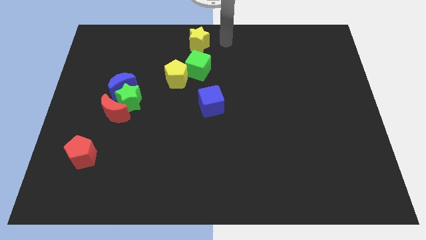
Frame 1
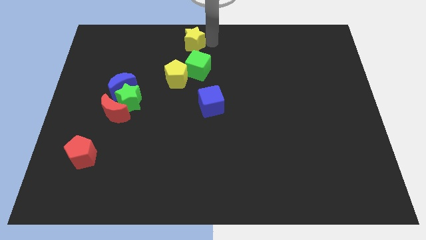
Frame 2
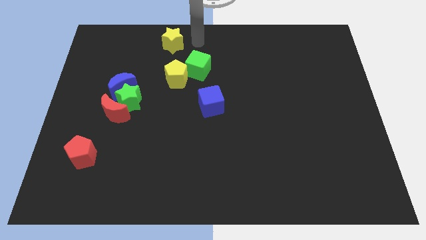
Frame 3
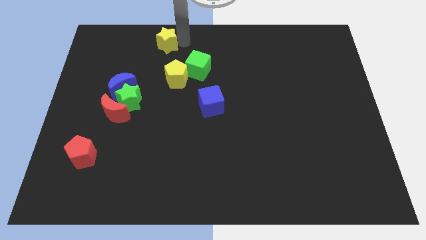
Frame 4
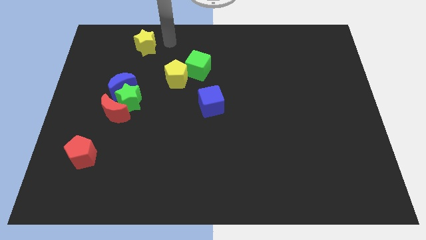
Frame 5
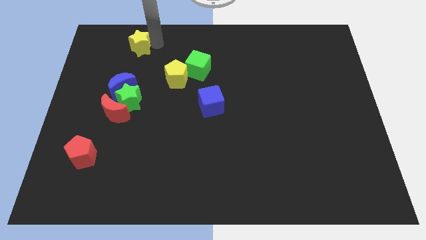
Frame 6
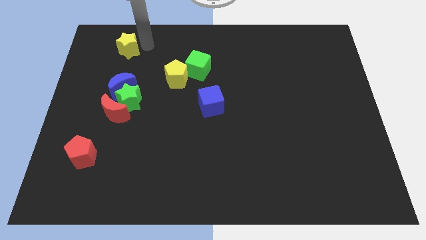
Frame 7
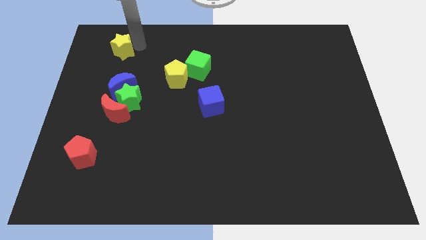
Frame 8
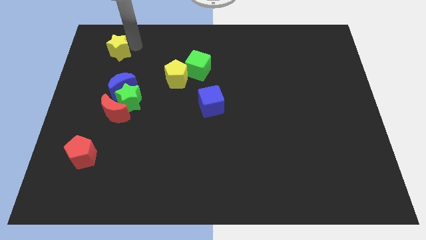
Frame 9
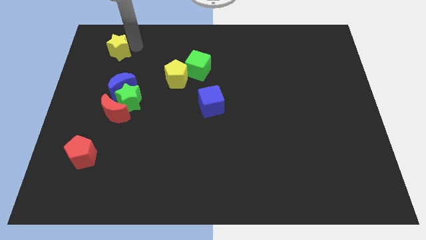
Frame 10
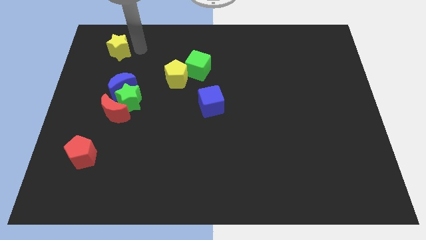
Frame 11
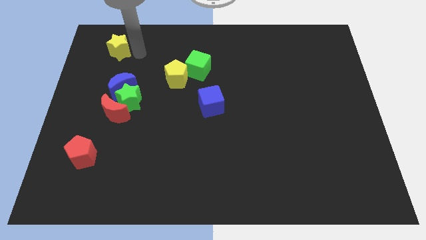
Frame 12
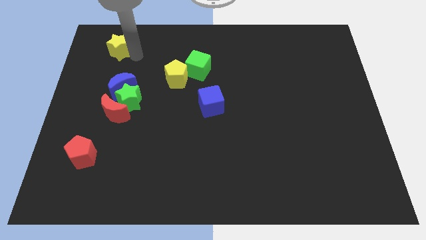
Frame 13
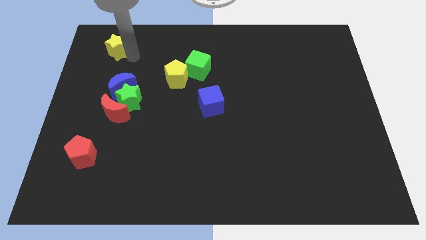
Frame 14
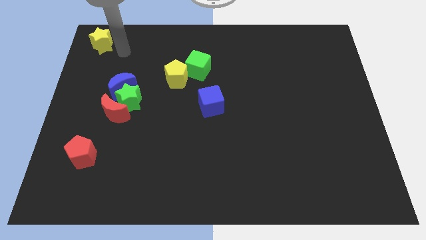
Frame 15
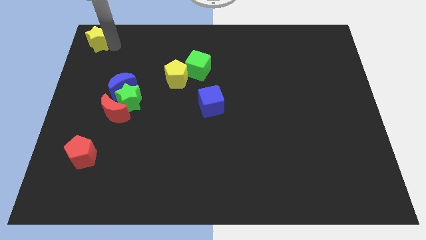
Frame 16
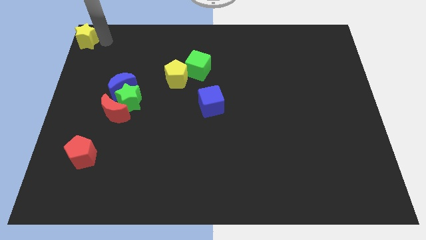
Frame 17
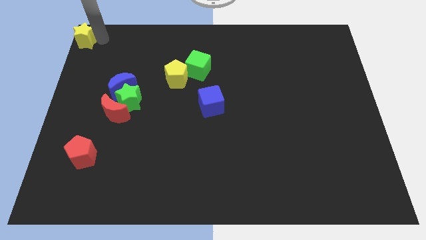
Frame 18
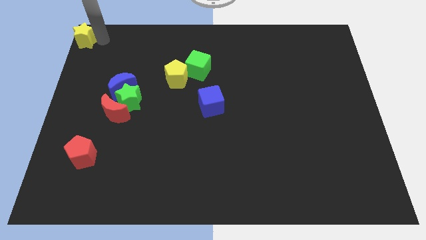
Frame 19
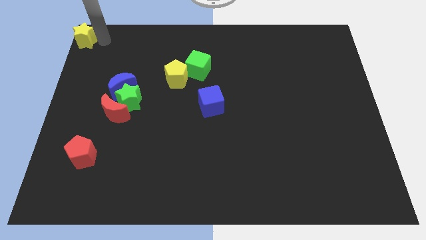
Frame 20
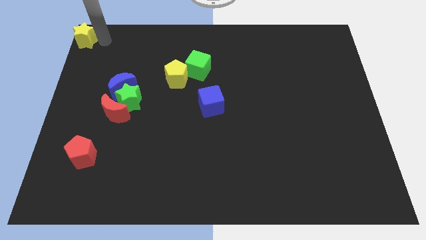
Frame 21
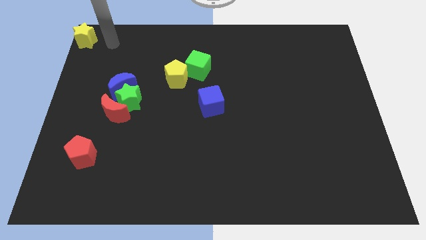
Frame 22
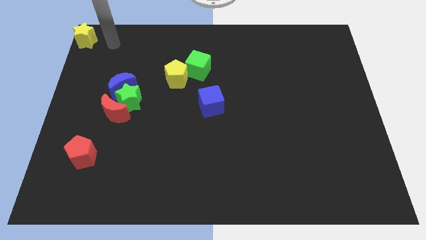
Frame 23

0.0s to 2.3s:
move the yellow star to the top left corner of the board

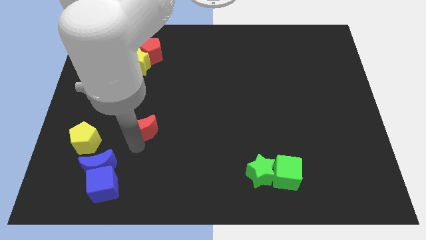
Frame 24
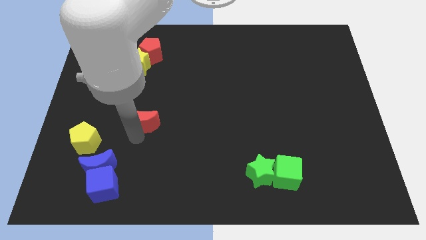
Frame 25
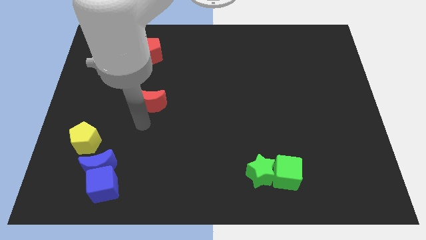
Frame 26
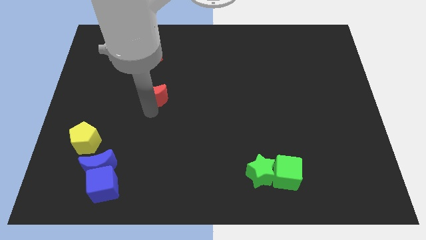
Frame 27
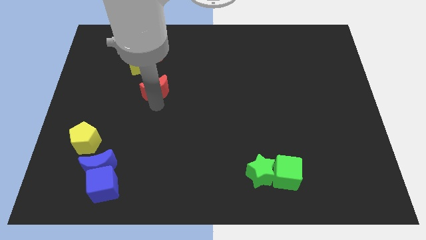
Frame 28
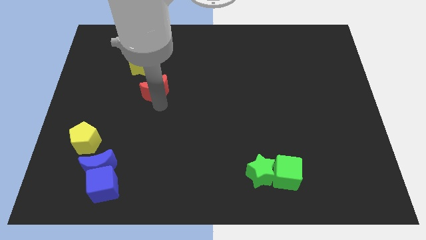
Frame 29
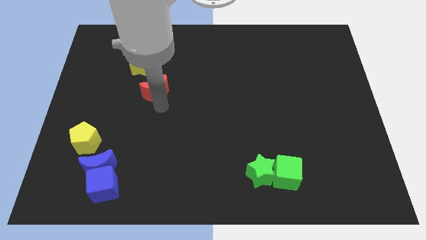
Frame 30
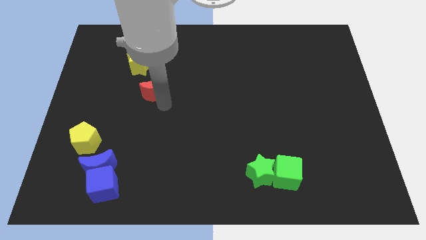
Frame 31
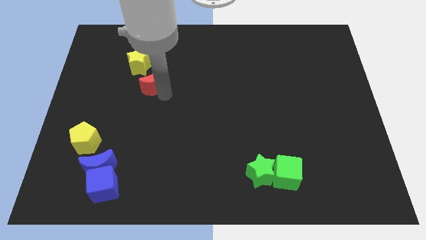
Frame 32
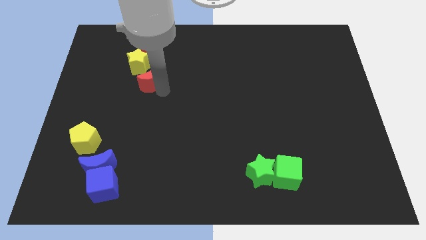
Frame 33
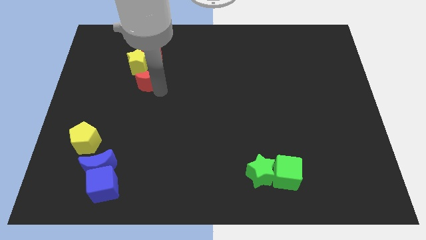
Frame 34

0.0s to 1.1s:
move the red crescent below the yellow star

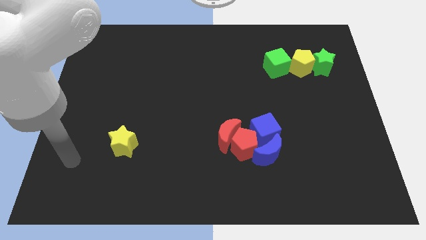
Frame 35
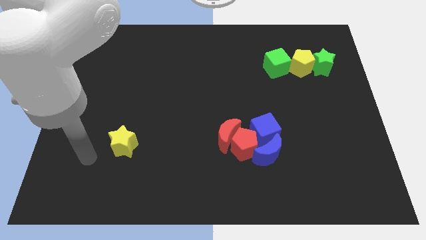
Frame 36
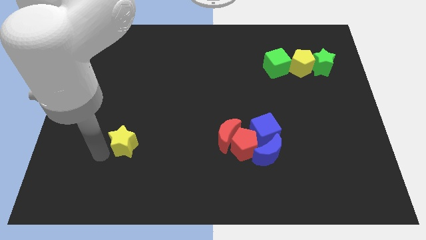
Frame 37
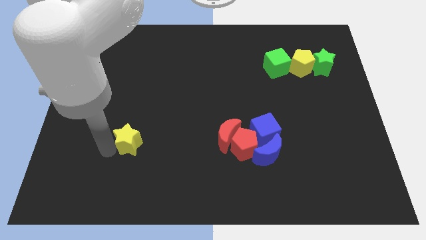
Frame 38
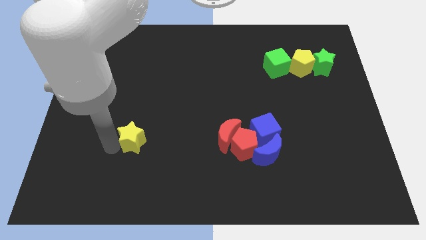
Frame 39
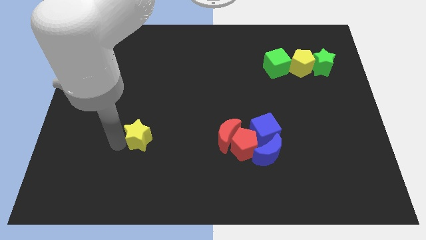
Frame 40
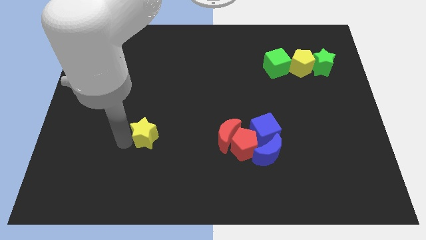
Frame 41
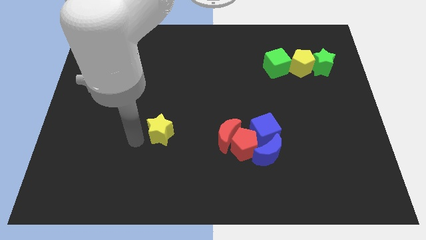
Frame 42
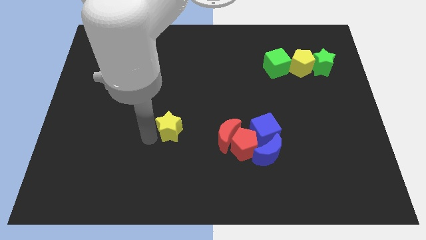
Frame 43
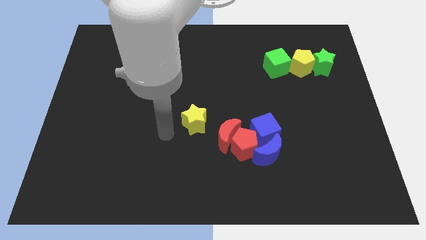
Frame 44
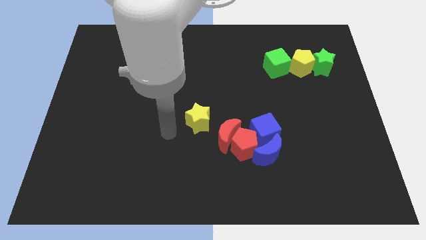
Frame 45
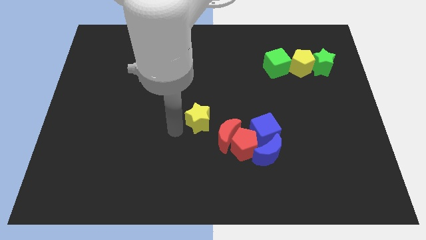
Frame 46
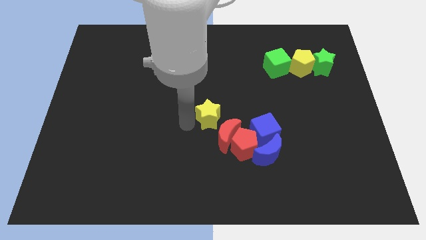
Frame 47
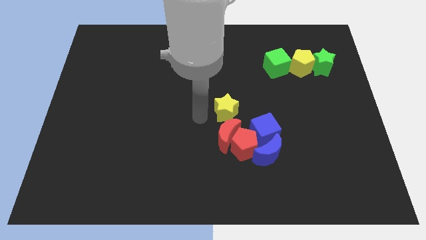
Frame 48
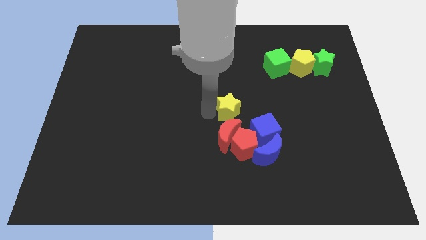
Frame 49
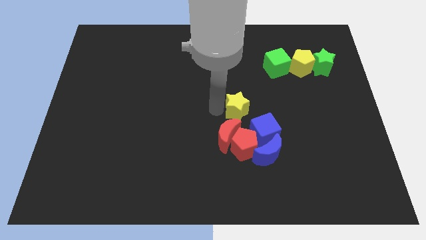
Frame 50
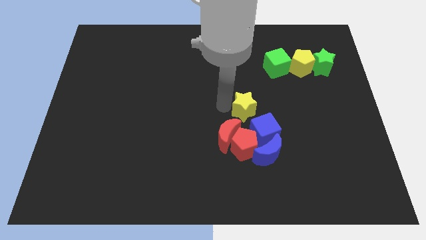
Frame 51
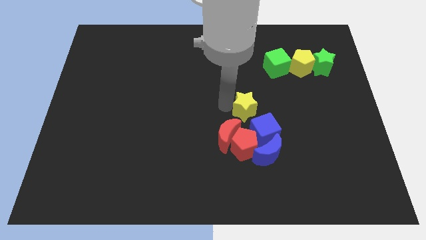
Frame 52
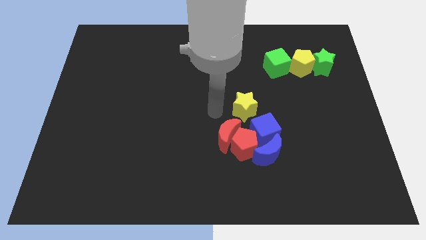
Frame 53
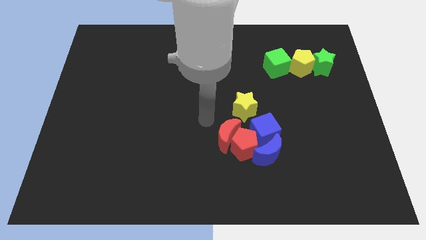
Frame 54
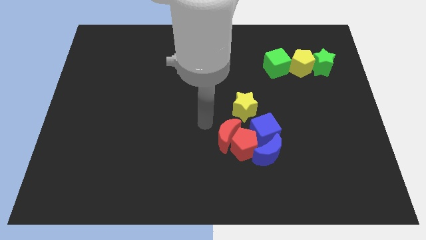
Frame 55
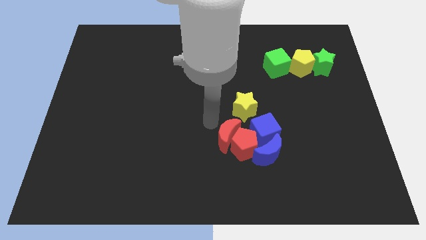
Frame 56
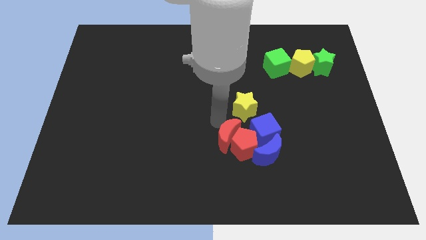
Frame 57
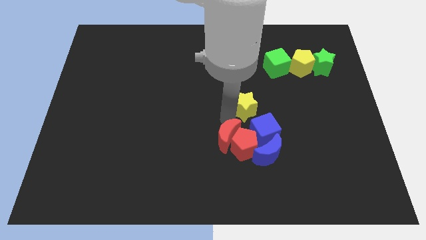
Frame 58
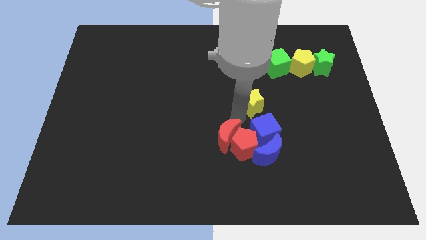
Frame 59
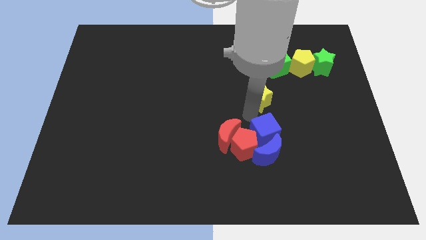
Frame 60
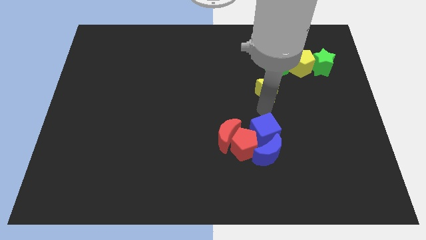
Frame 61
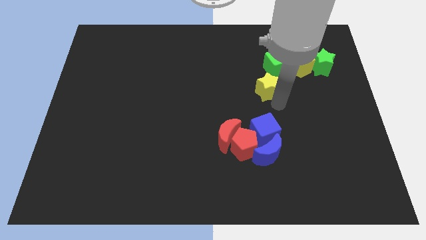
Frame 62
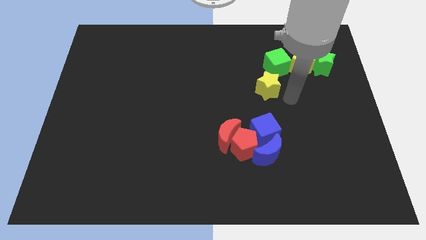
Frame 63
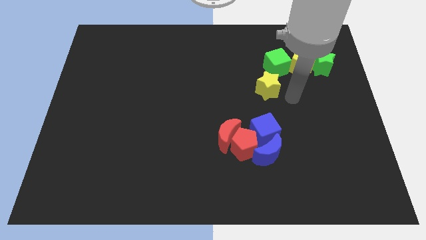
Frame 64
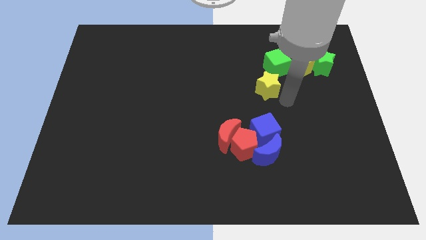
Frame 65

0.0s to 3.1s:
push the yellow star to the bottom left of the green cube

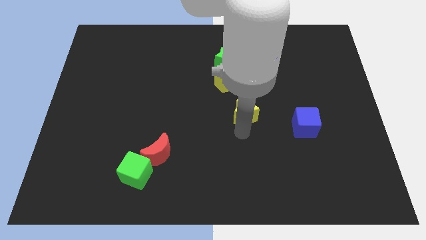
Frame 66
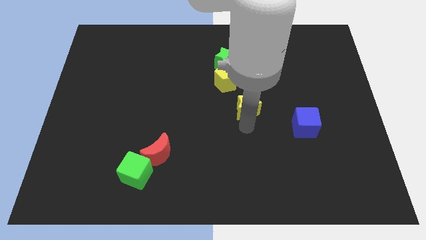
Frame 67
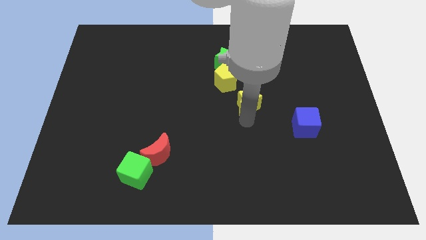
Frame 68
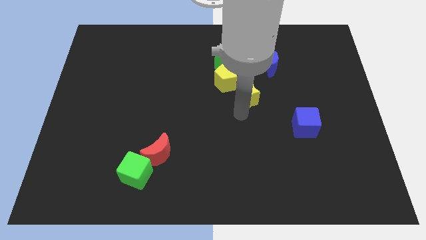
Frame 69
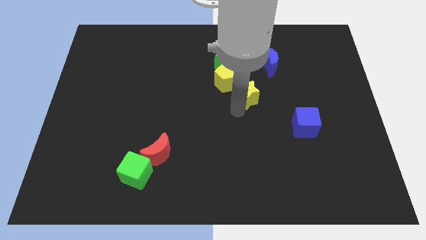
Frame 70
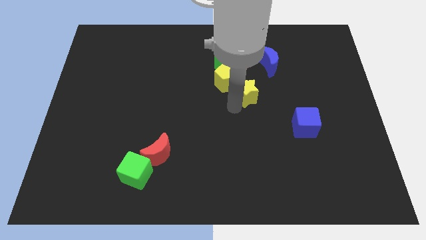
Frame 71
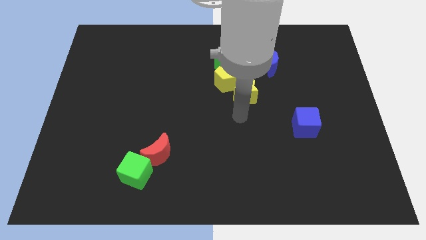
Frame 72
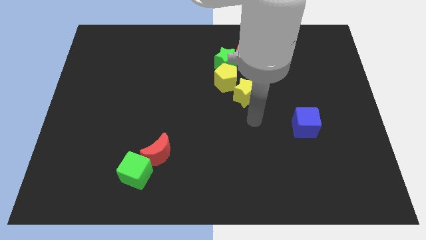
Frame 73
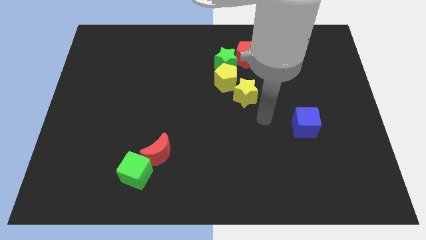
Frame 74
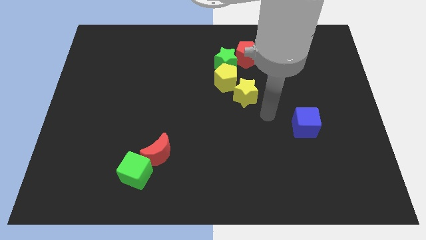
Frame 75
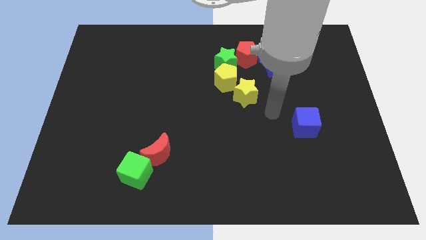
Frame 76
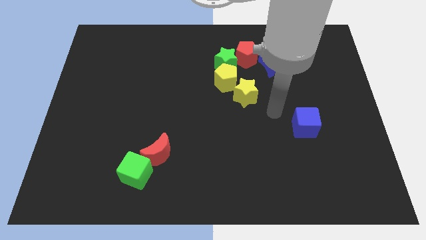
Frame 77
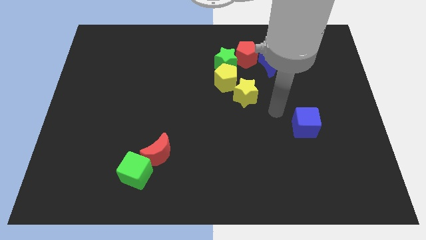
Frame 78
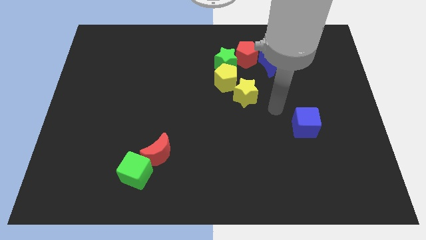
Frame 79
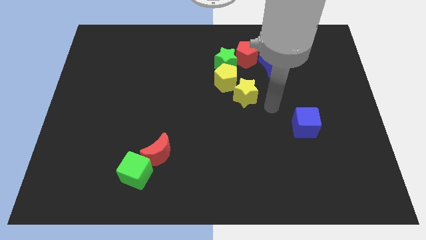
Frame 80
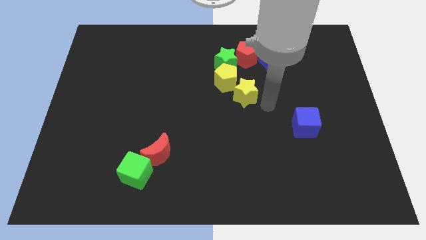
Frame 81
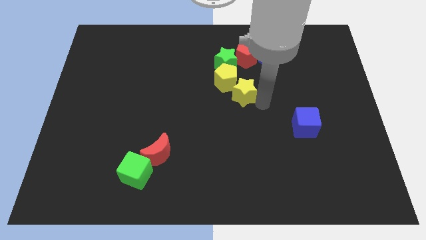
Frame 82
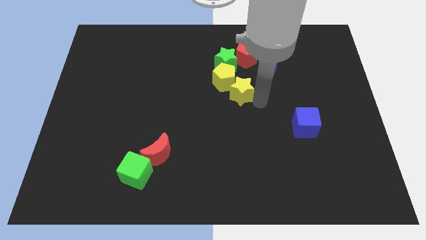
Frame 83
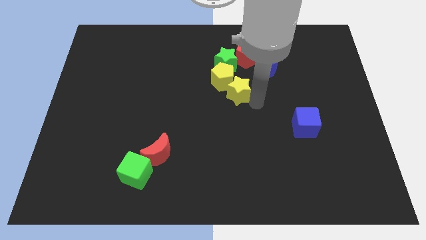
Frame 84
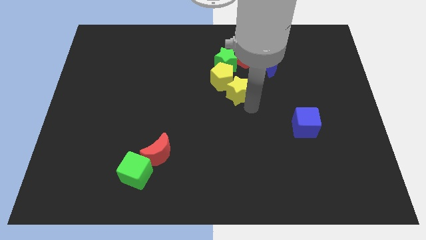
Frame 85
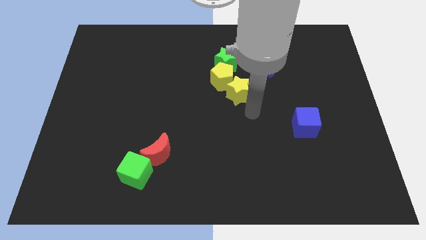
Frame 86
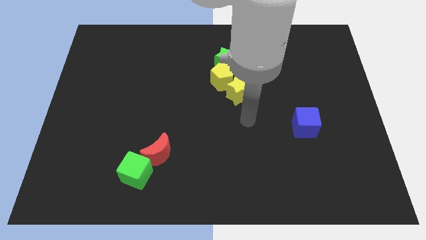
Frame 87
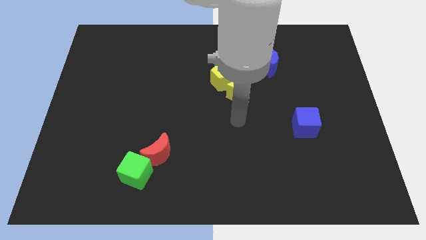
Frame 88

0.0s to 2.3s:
push the yellow star into the yellow pentagon

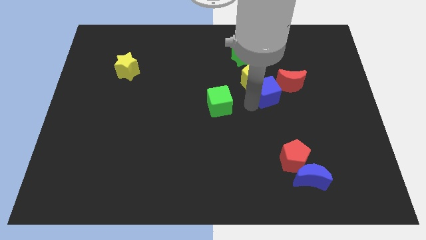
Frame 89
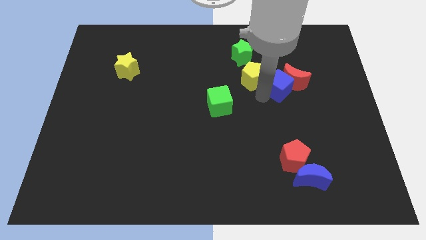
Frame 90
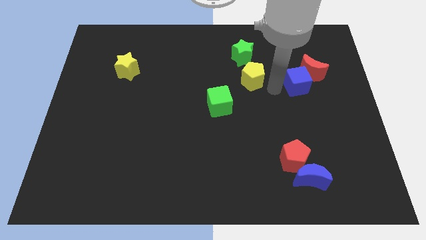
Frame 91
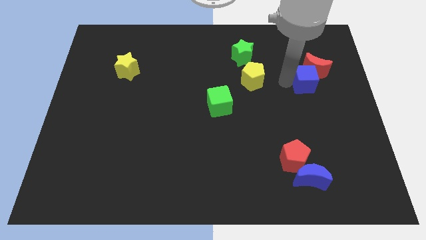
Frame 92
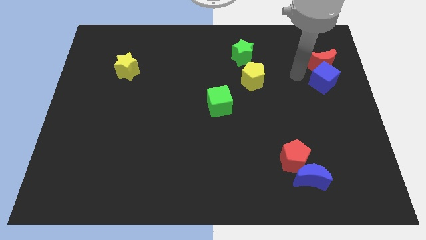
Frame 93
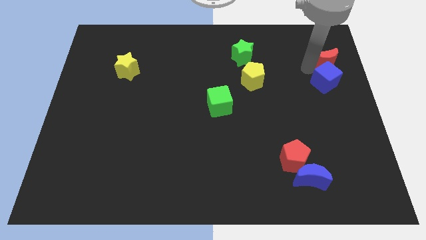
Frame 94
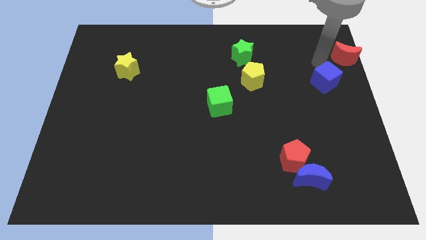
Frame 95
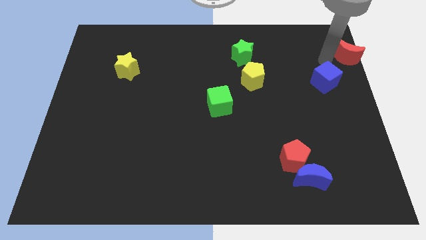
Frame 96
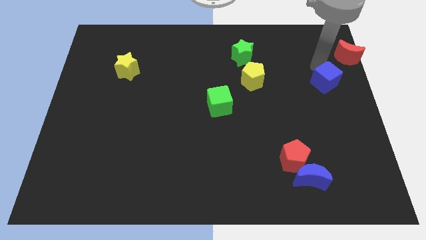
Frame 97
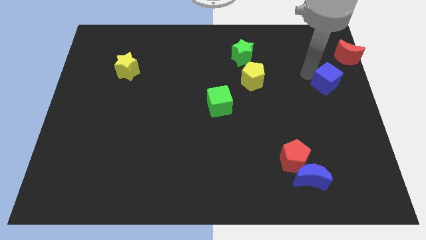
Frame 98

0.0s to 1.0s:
push the blue cube into the red moon
